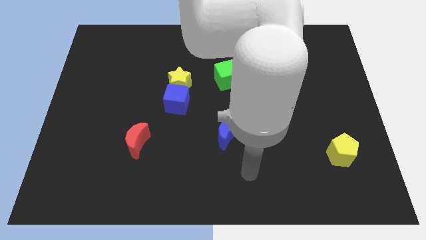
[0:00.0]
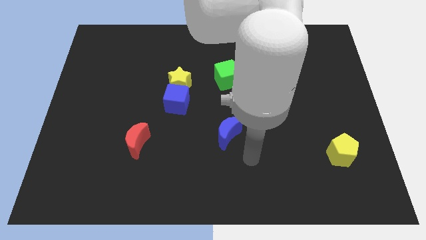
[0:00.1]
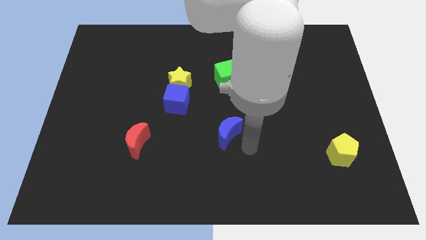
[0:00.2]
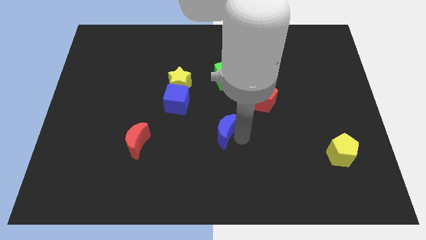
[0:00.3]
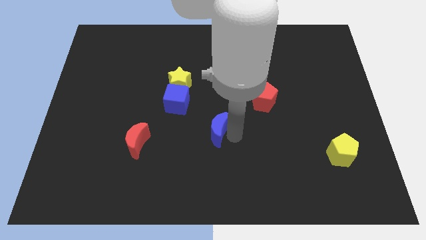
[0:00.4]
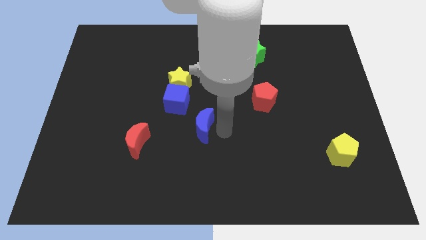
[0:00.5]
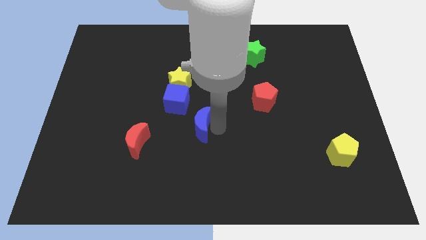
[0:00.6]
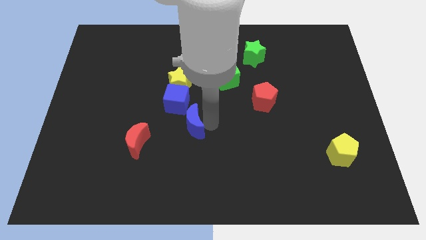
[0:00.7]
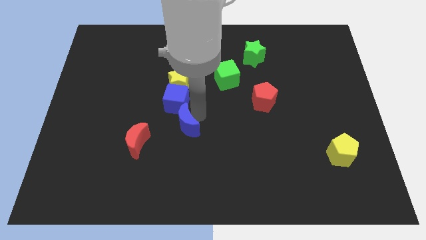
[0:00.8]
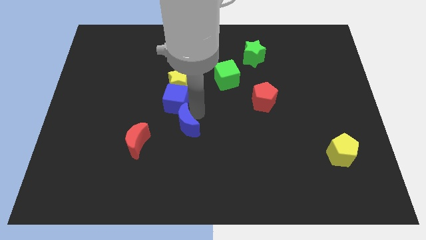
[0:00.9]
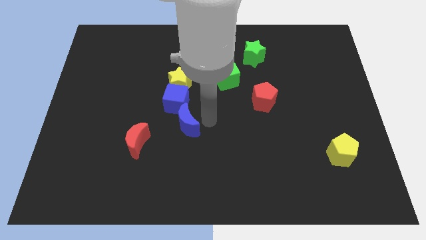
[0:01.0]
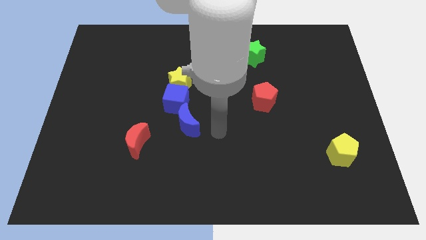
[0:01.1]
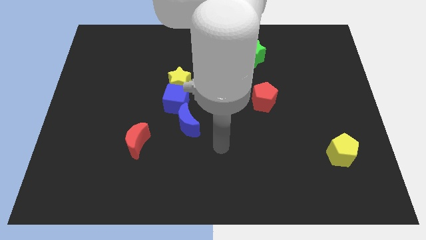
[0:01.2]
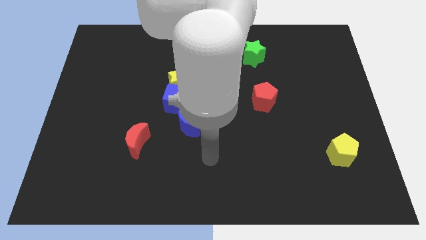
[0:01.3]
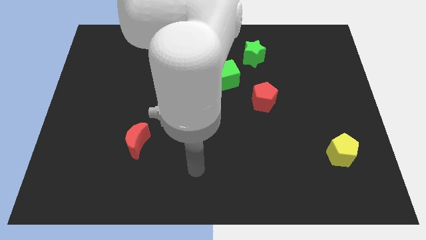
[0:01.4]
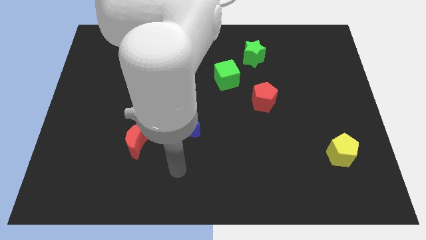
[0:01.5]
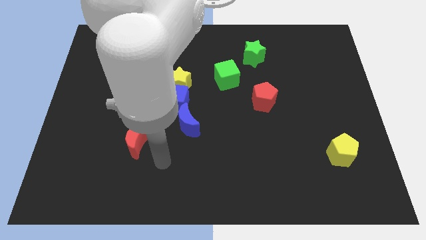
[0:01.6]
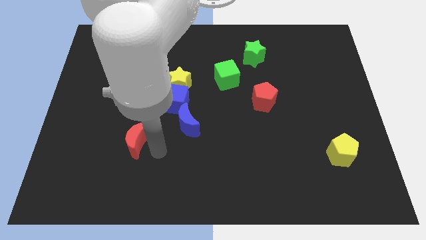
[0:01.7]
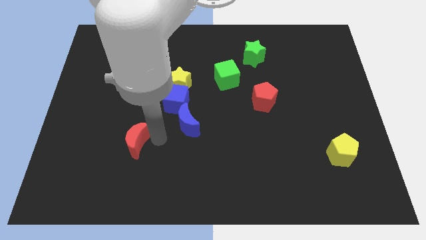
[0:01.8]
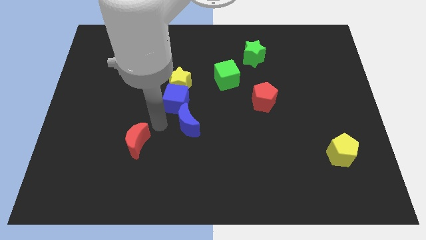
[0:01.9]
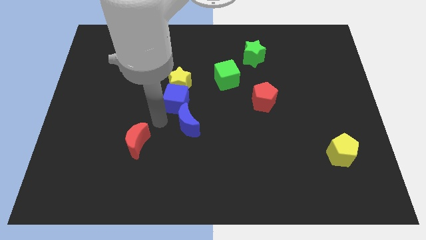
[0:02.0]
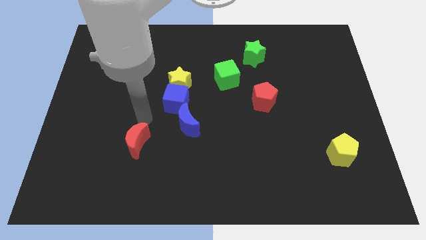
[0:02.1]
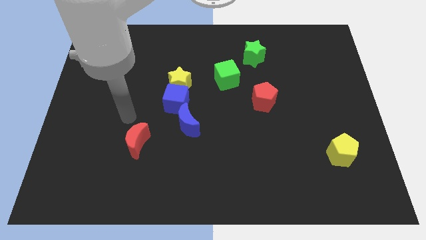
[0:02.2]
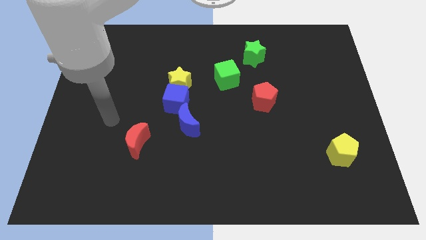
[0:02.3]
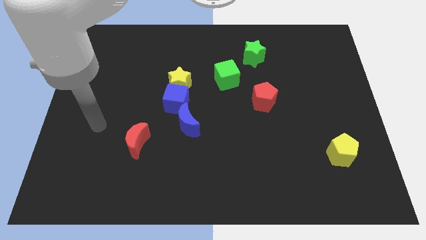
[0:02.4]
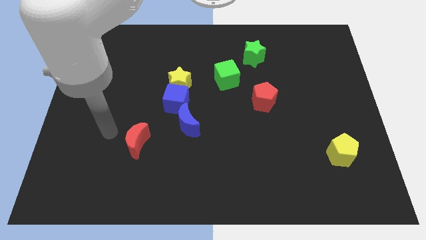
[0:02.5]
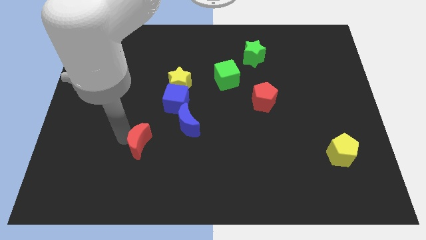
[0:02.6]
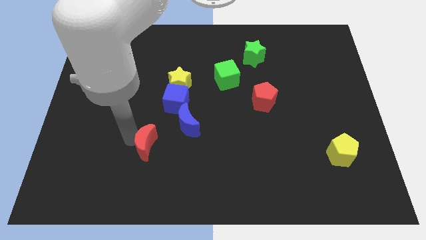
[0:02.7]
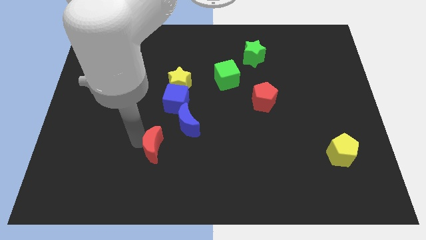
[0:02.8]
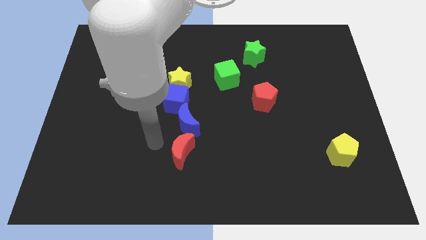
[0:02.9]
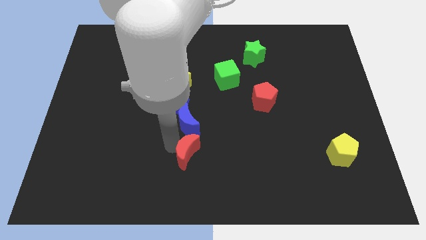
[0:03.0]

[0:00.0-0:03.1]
place the red crescent towards down to the blue crescent

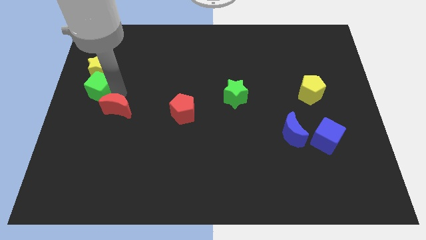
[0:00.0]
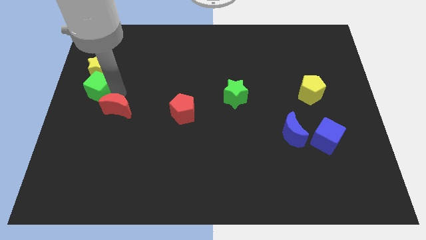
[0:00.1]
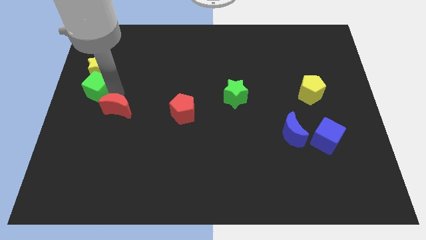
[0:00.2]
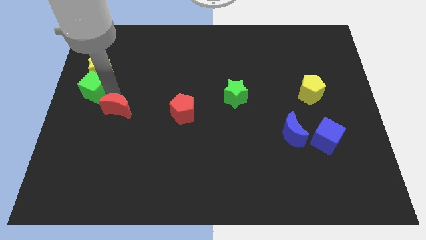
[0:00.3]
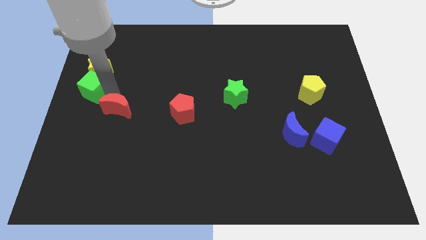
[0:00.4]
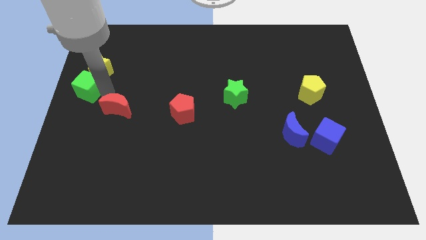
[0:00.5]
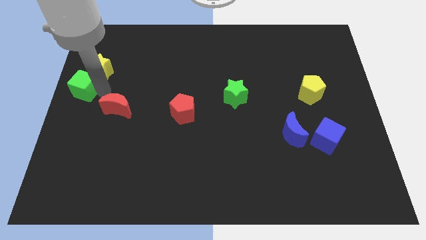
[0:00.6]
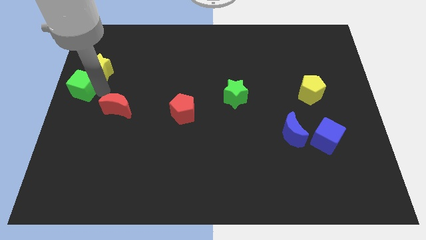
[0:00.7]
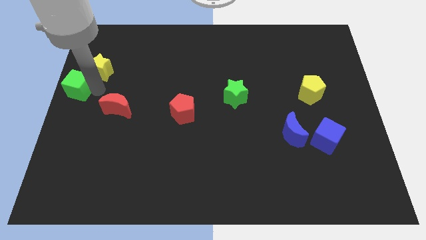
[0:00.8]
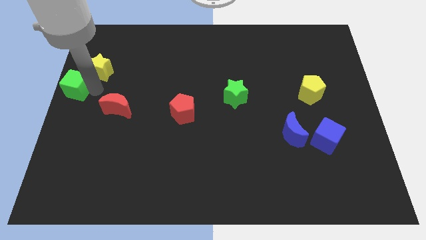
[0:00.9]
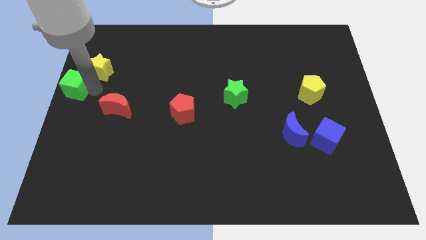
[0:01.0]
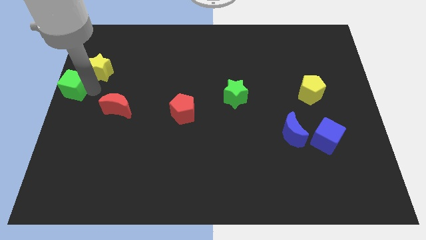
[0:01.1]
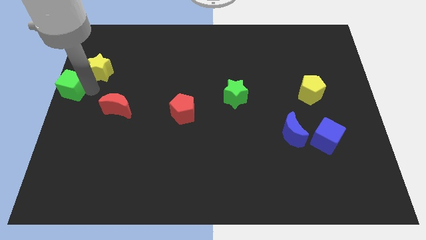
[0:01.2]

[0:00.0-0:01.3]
move the green cube slightly to the left

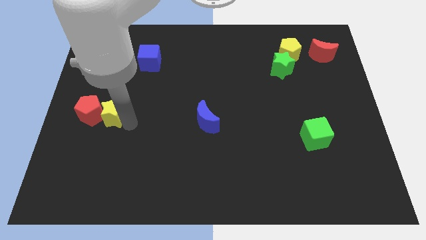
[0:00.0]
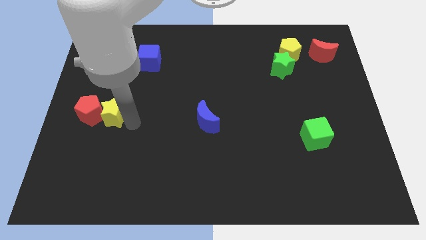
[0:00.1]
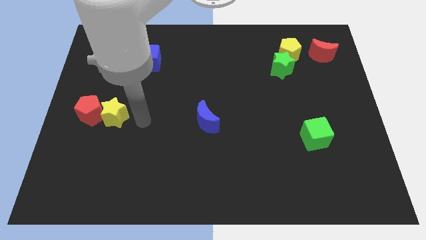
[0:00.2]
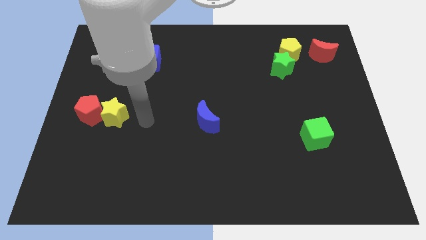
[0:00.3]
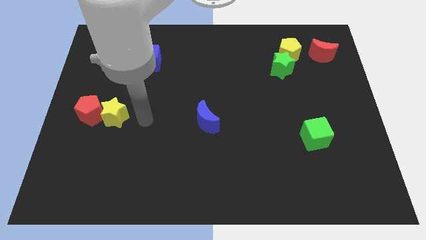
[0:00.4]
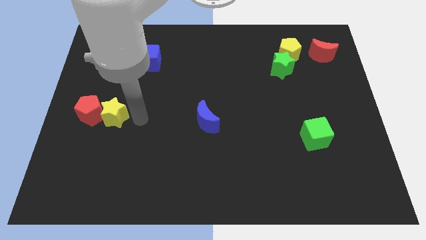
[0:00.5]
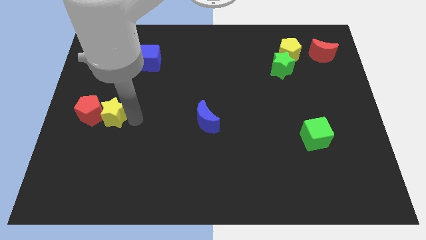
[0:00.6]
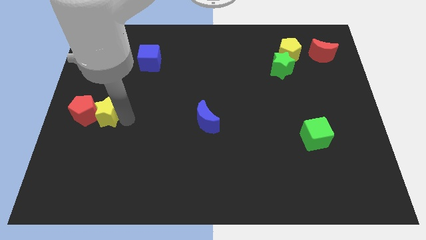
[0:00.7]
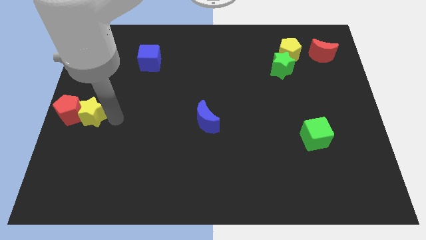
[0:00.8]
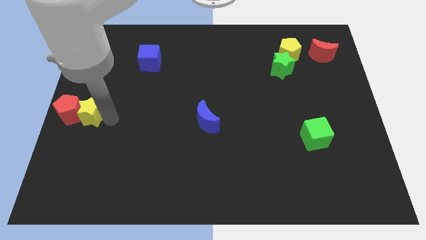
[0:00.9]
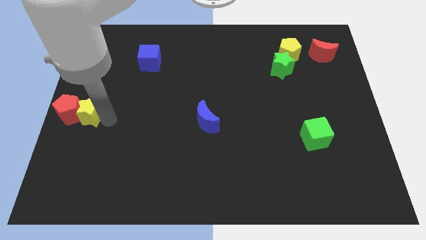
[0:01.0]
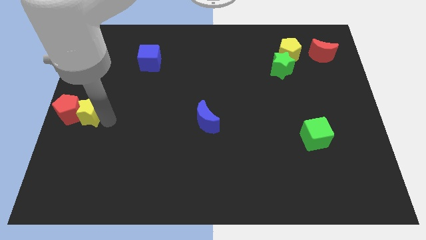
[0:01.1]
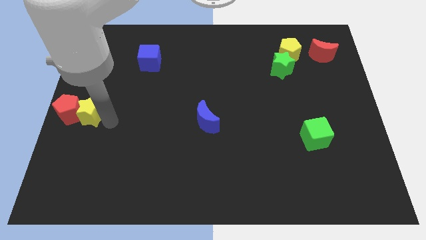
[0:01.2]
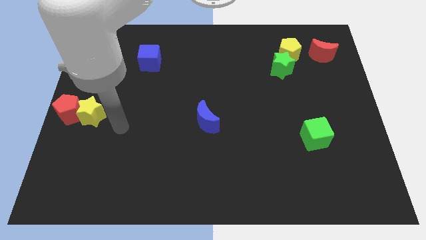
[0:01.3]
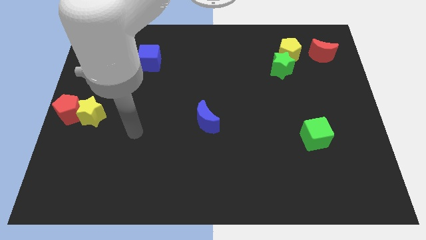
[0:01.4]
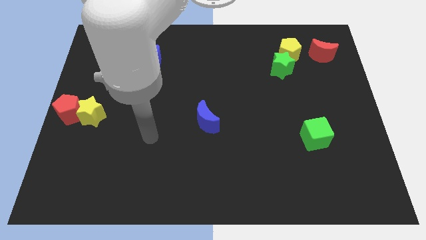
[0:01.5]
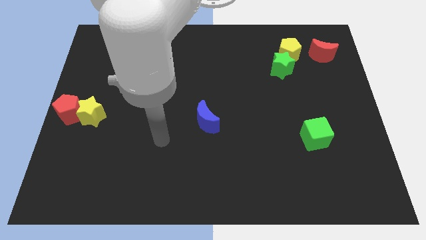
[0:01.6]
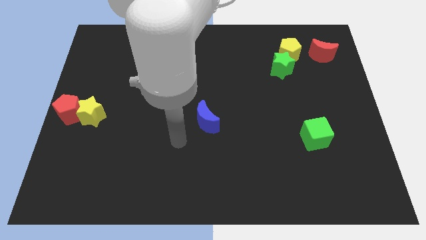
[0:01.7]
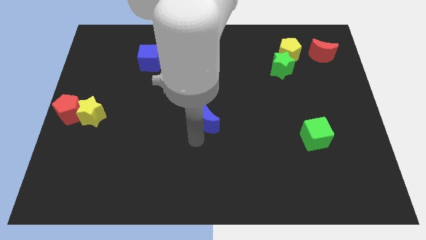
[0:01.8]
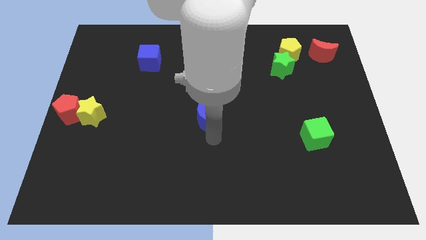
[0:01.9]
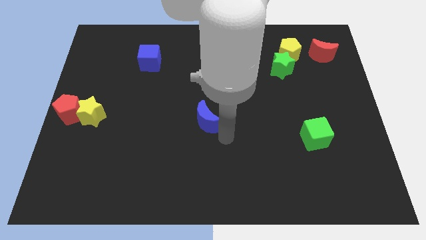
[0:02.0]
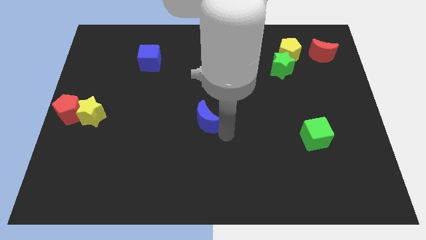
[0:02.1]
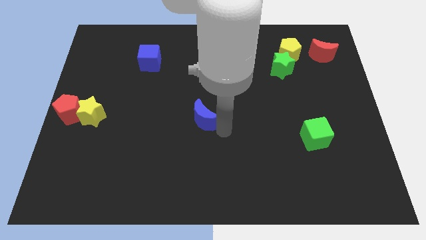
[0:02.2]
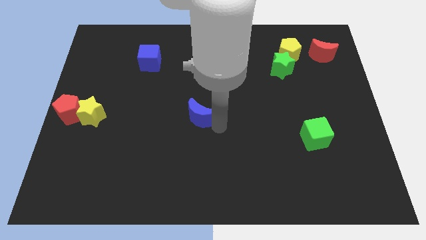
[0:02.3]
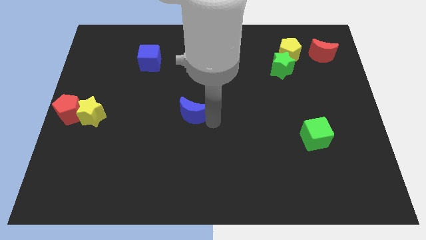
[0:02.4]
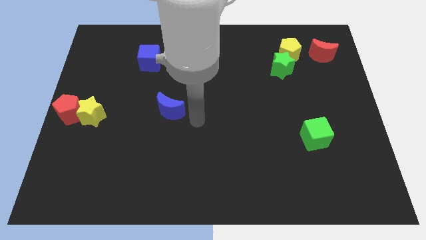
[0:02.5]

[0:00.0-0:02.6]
move blue crescent slightly up

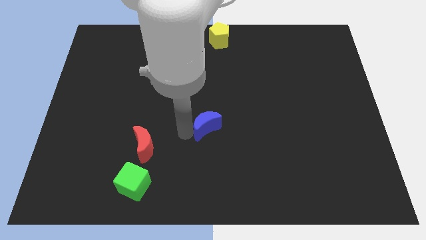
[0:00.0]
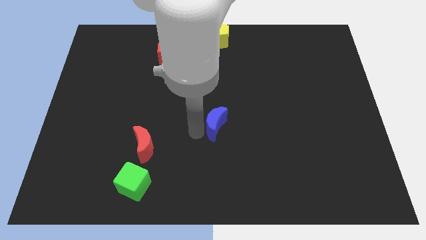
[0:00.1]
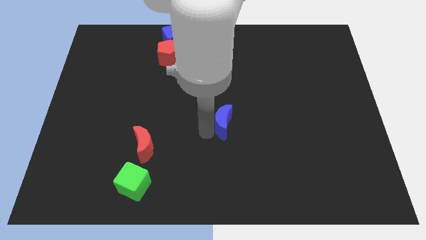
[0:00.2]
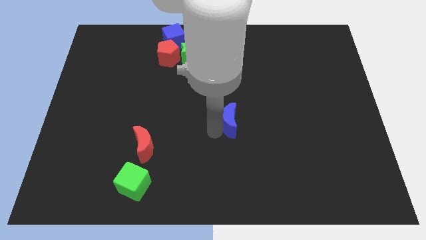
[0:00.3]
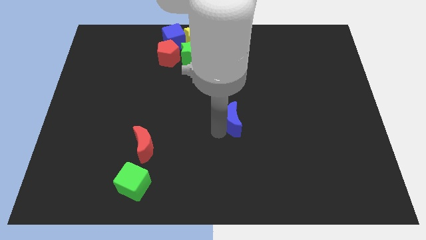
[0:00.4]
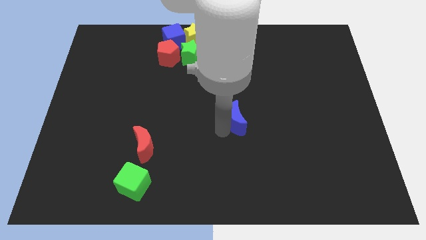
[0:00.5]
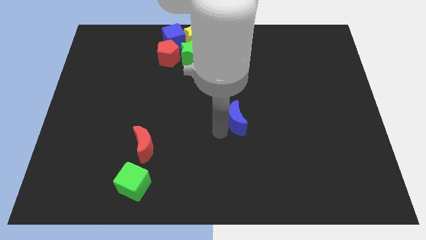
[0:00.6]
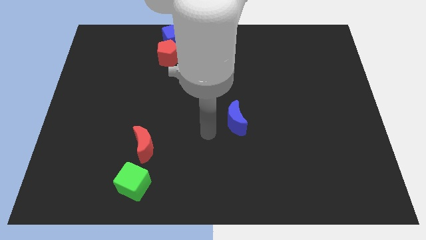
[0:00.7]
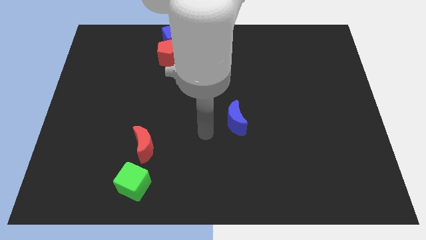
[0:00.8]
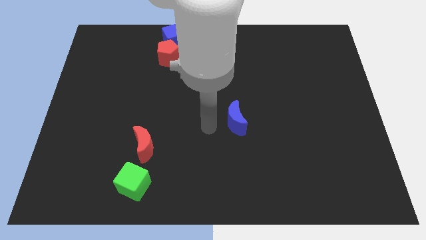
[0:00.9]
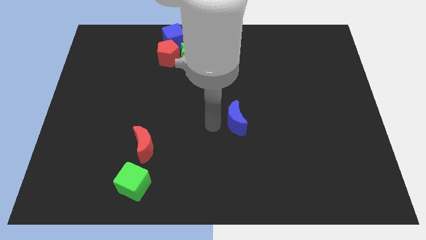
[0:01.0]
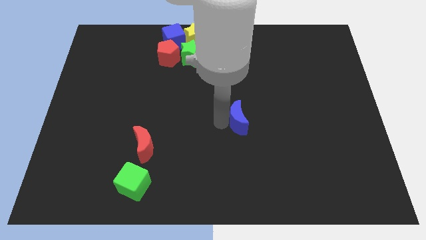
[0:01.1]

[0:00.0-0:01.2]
push the blue moon towards the right

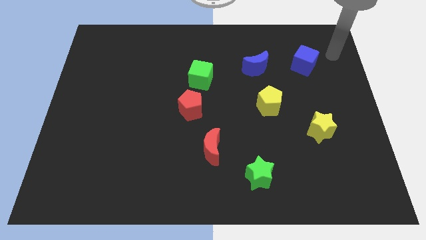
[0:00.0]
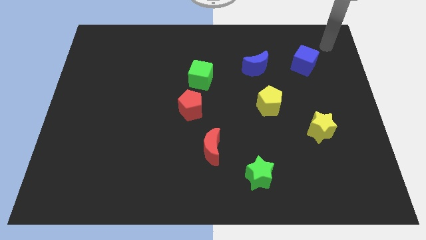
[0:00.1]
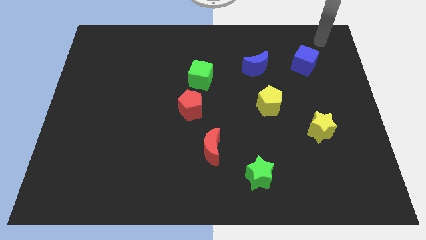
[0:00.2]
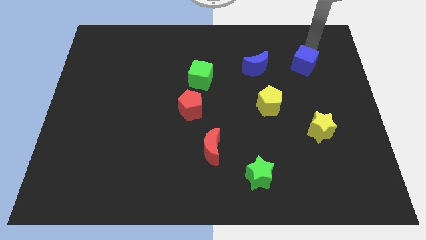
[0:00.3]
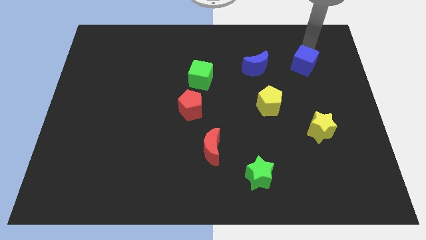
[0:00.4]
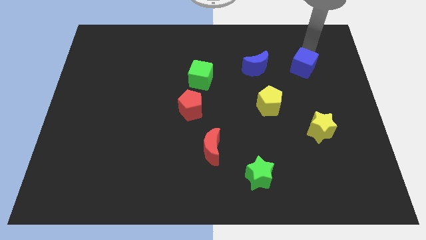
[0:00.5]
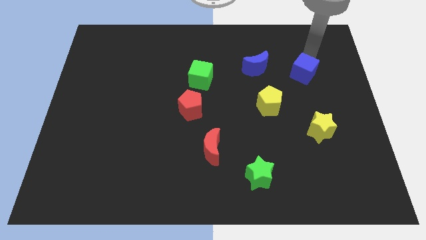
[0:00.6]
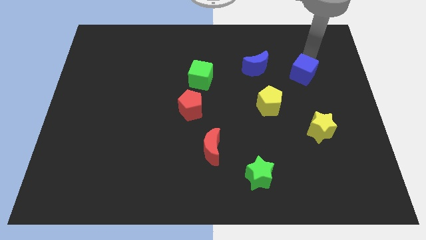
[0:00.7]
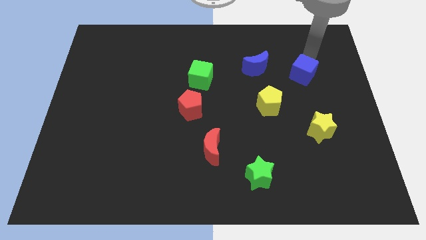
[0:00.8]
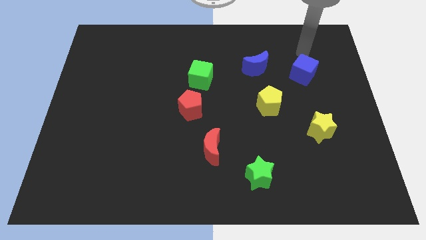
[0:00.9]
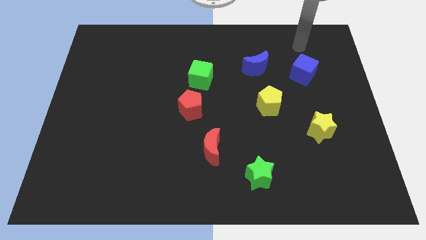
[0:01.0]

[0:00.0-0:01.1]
push the blue cube towards the yellow pentagon
